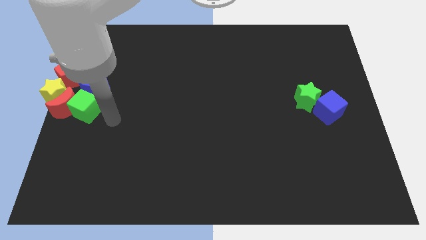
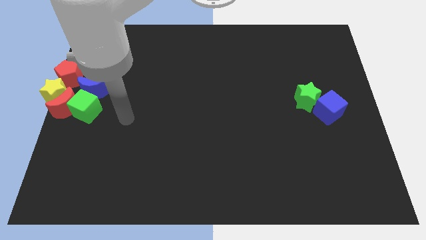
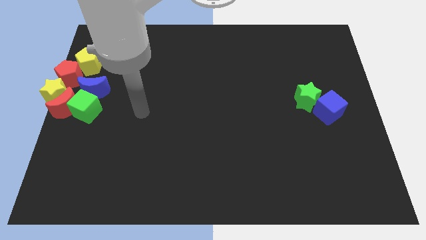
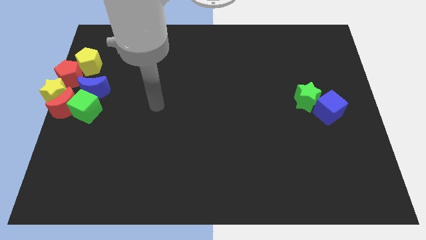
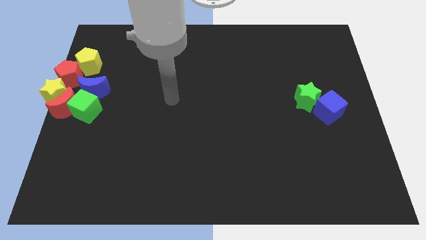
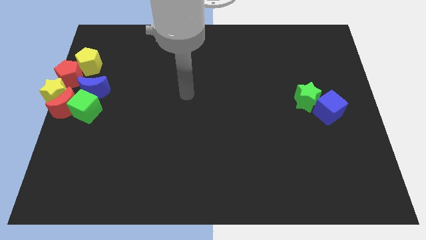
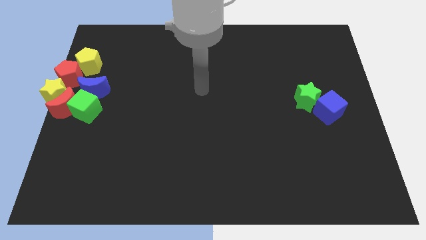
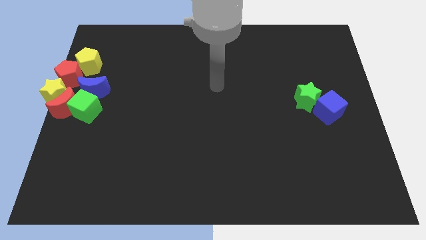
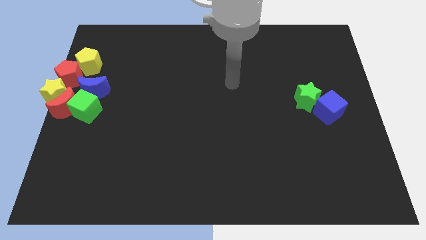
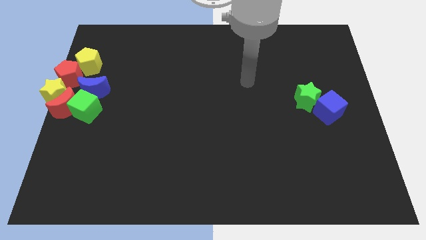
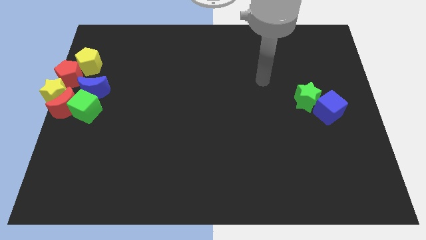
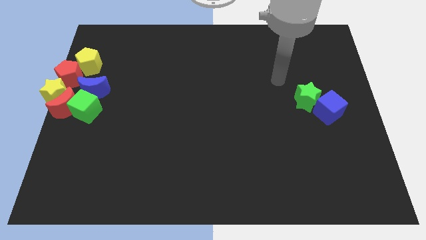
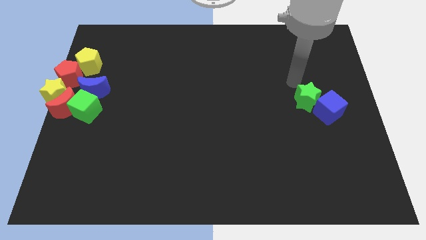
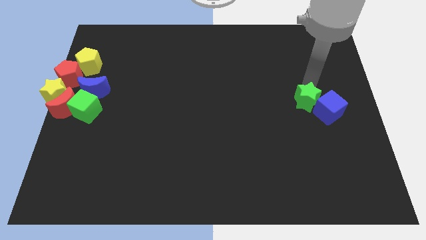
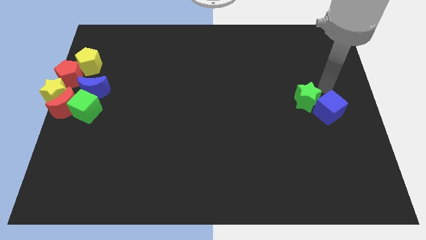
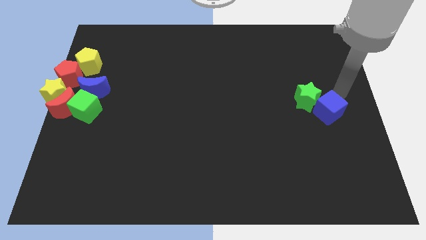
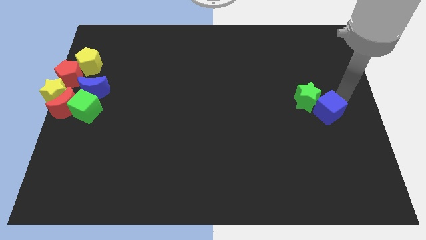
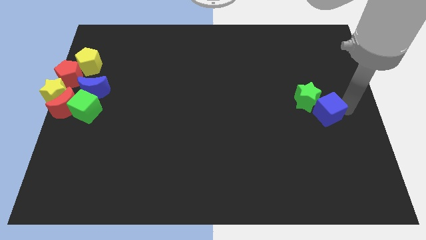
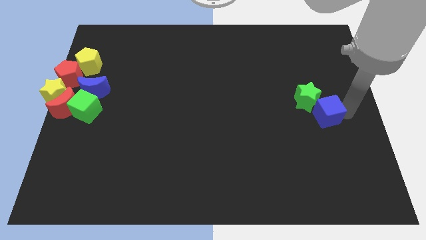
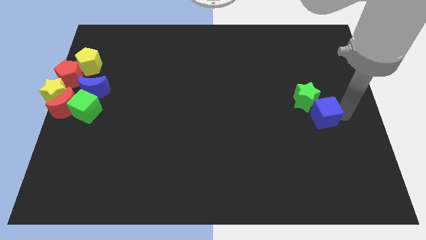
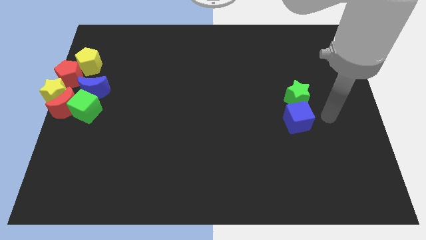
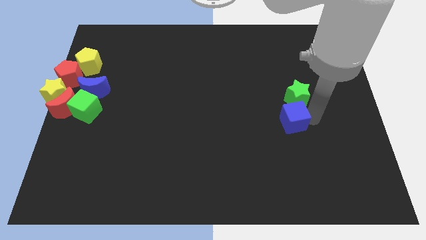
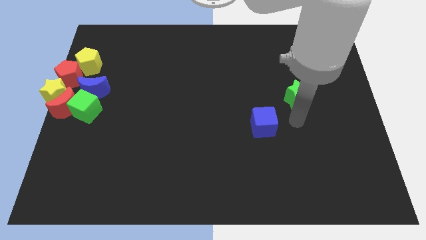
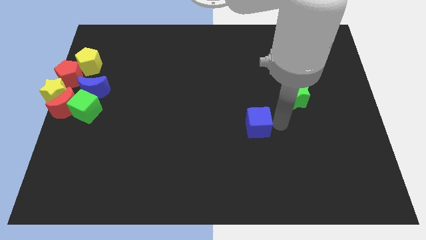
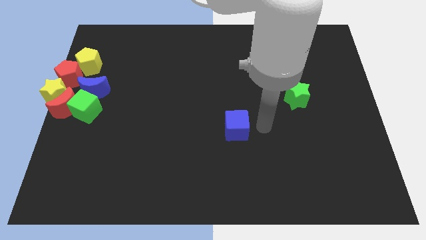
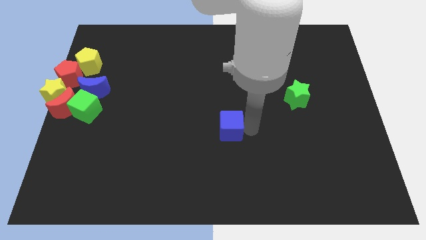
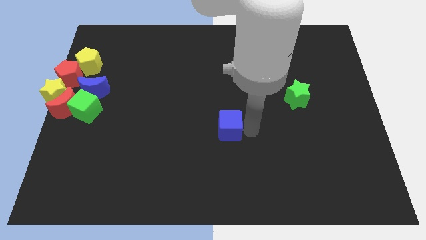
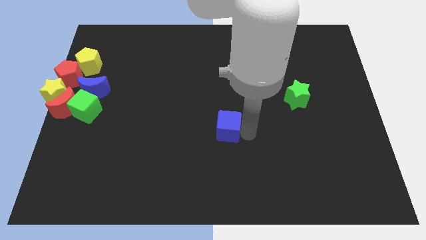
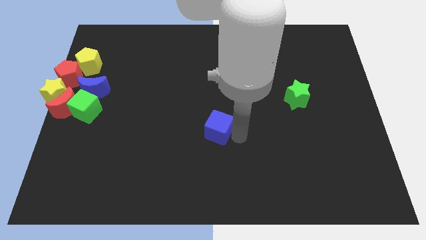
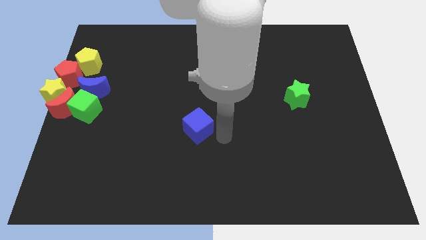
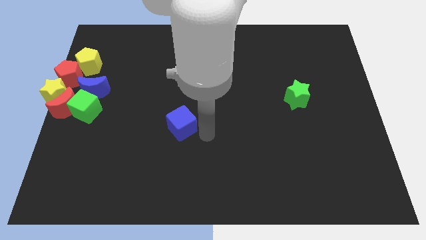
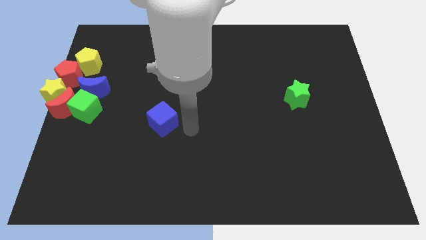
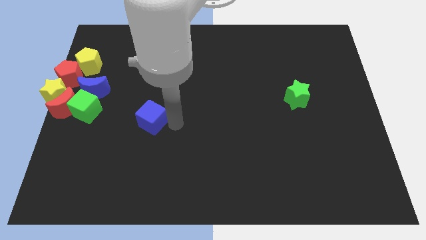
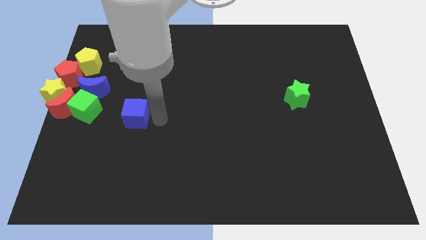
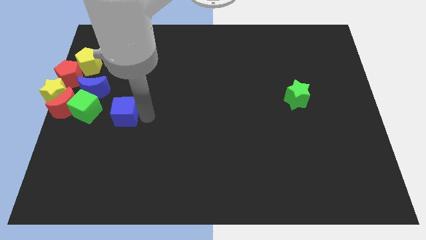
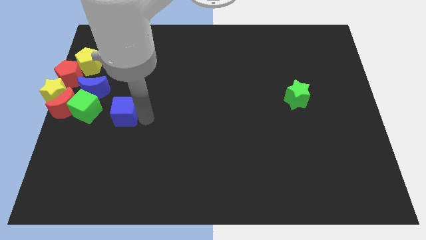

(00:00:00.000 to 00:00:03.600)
move the blue cube towards the green cube

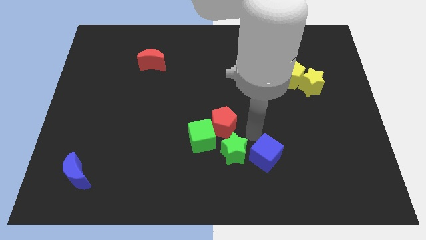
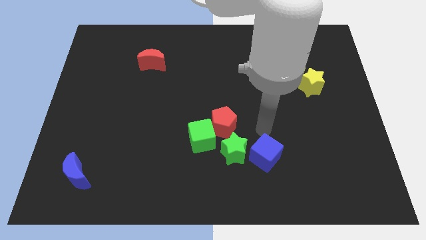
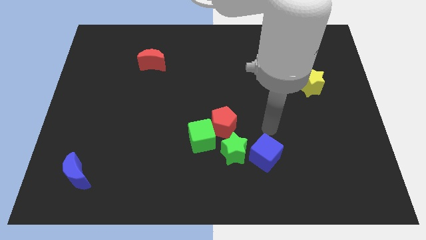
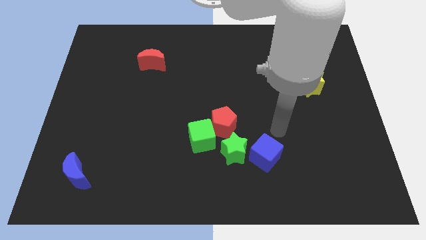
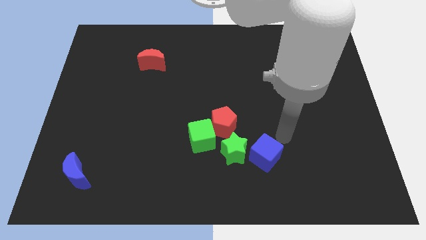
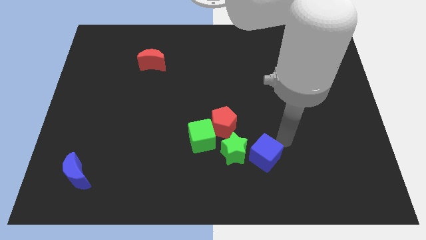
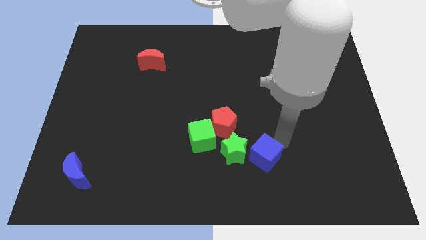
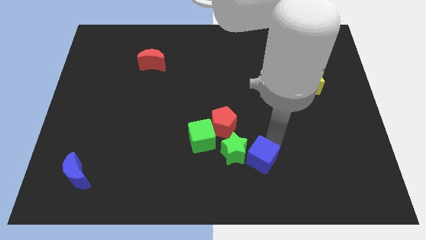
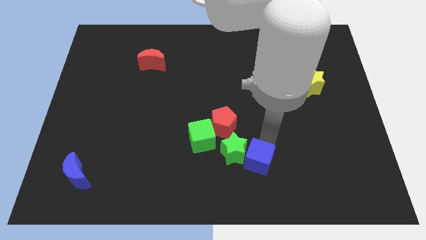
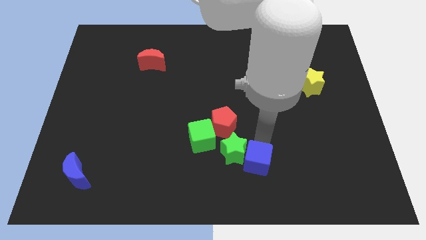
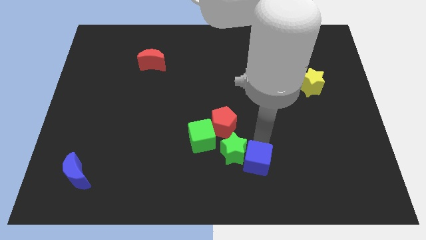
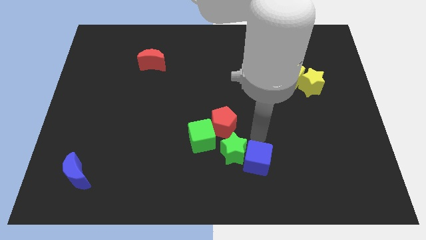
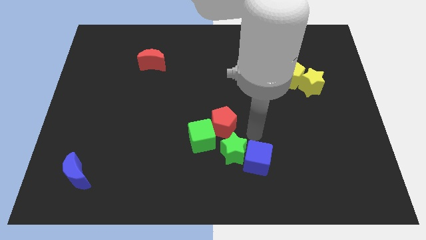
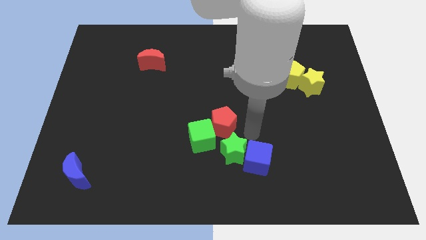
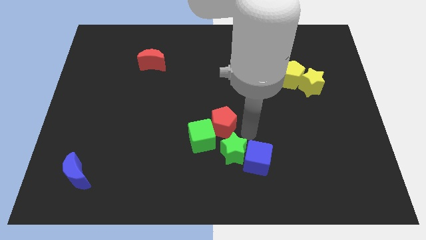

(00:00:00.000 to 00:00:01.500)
adjust the blue cube beside the green star

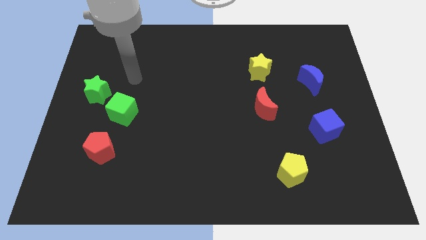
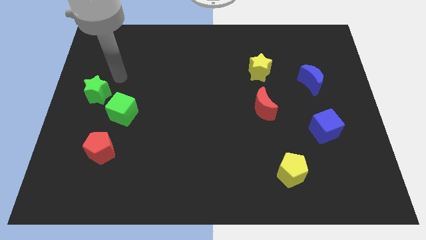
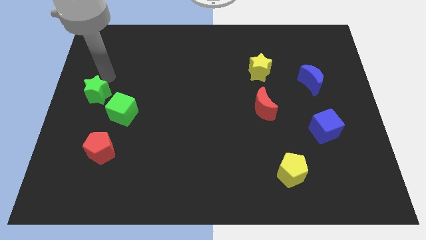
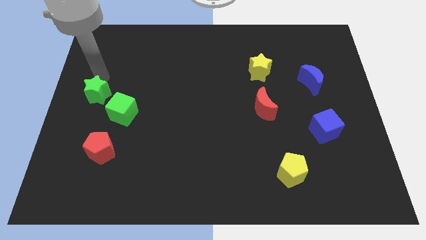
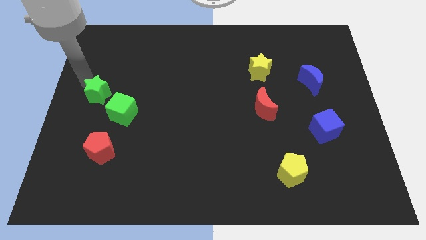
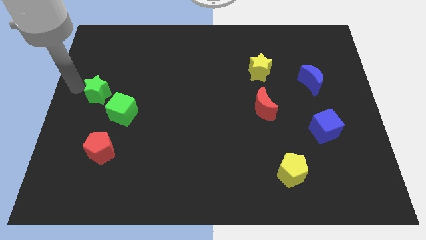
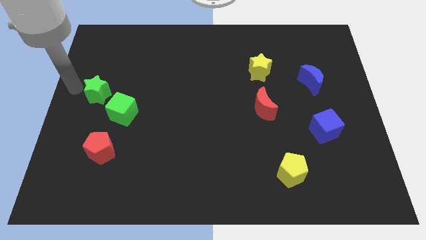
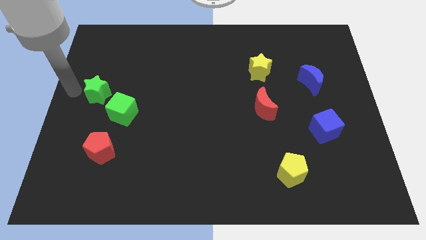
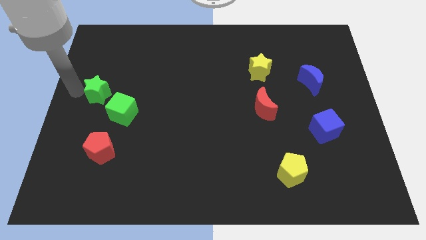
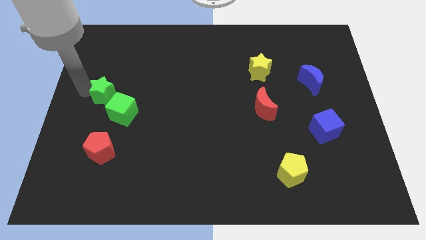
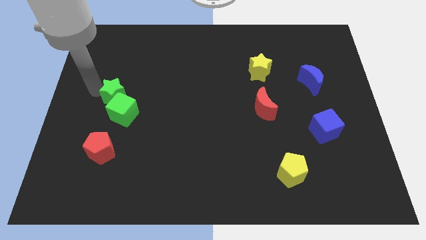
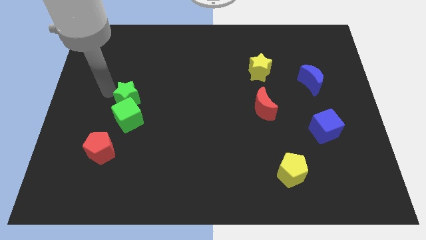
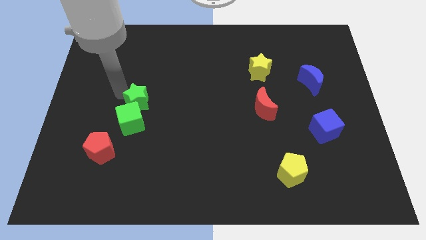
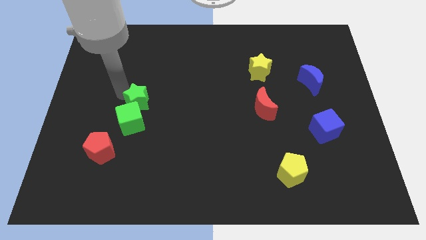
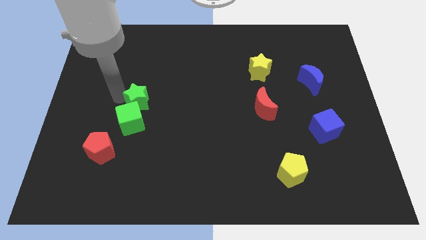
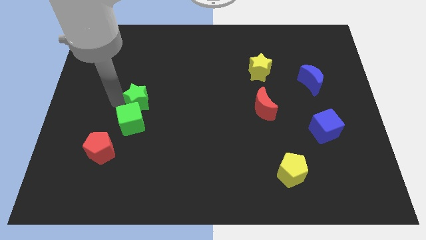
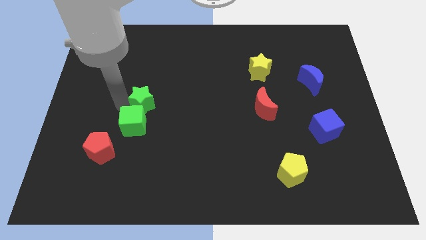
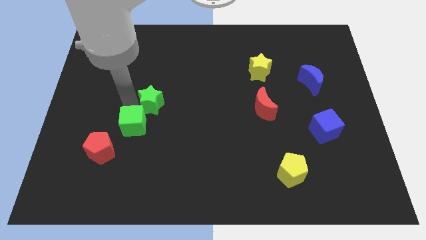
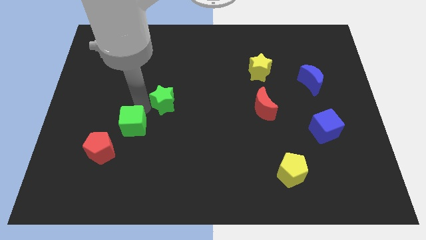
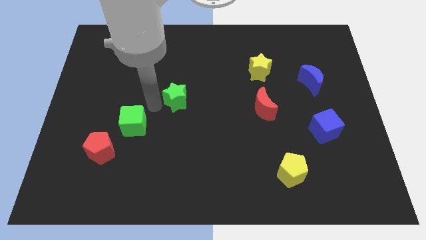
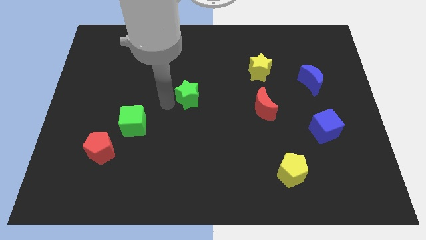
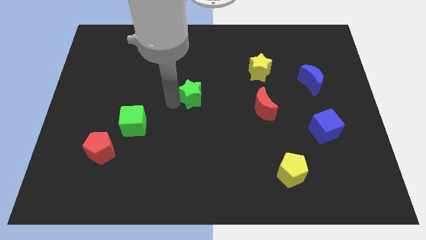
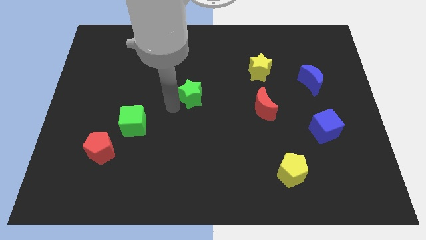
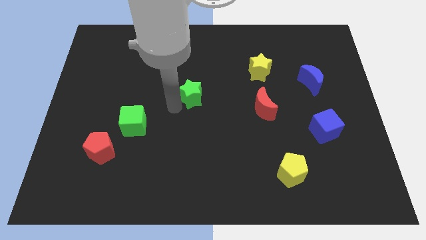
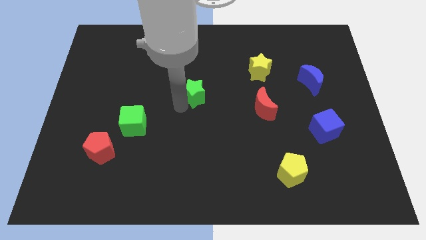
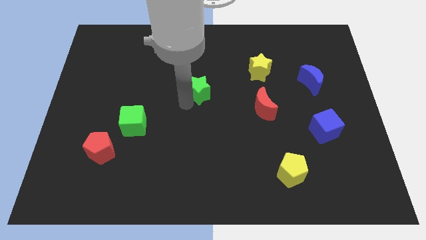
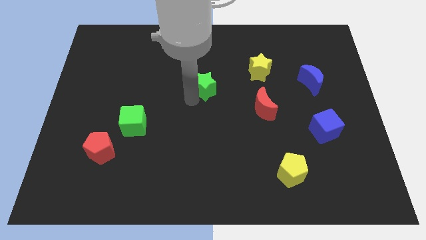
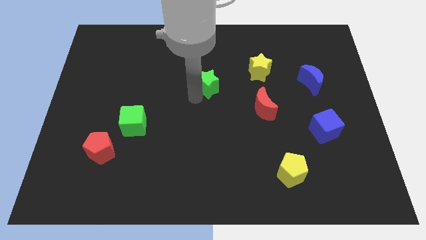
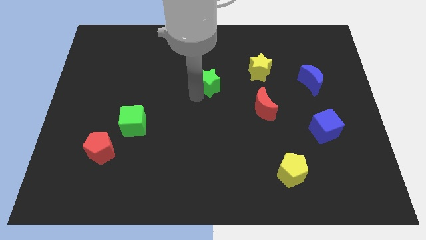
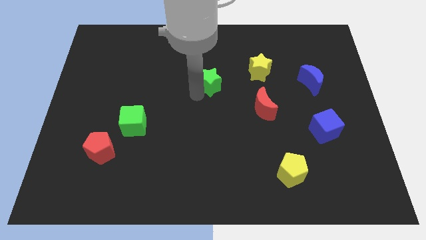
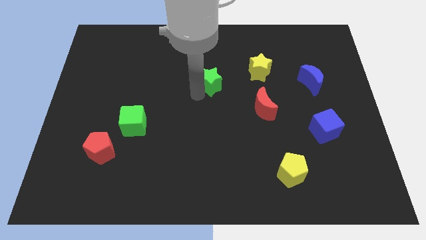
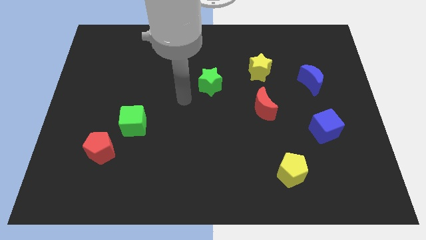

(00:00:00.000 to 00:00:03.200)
separate the green star from the green cube

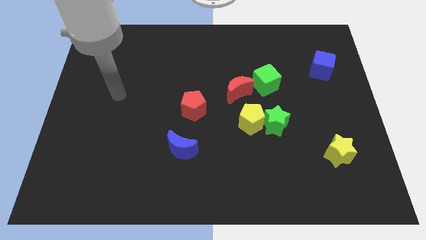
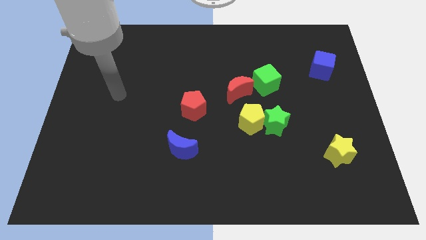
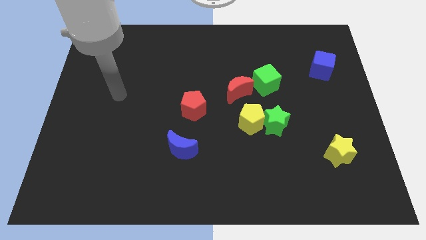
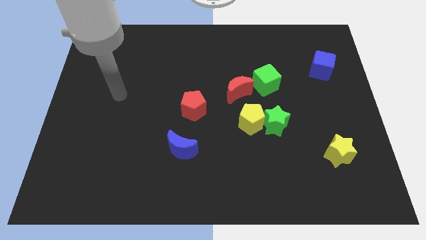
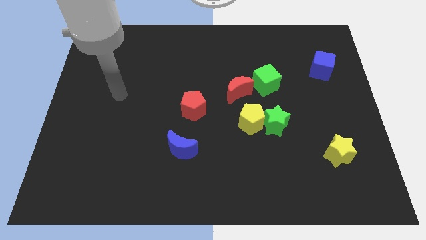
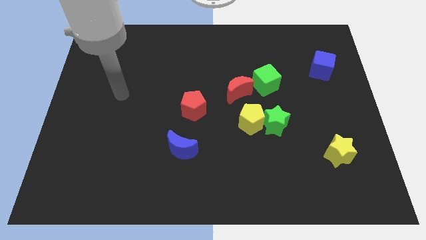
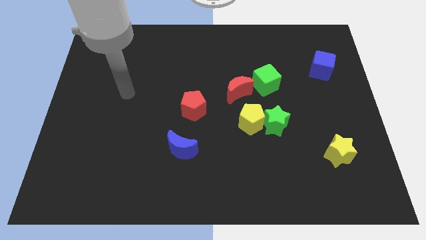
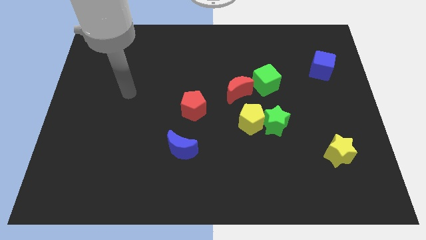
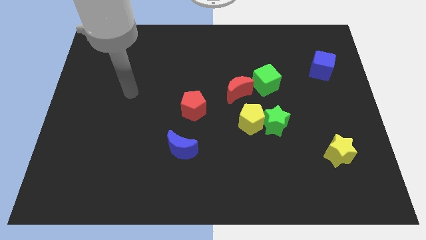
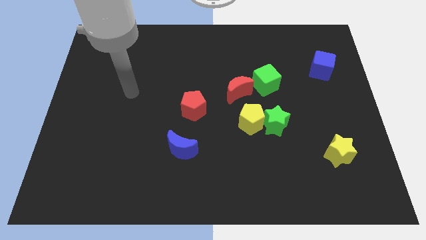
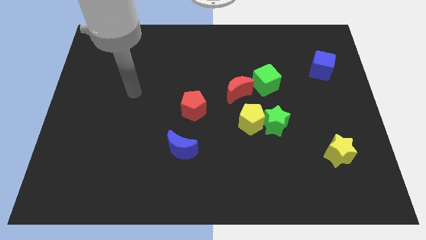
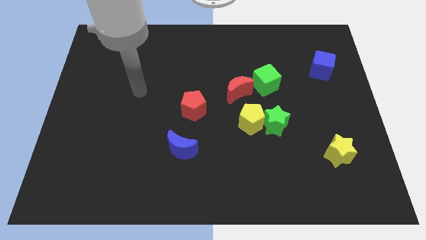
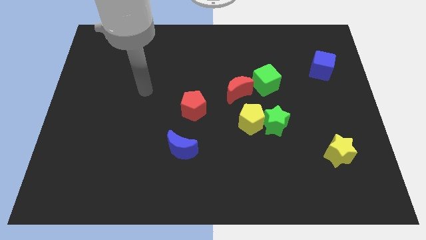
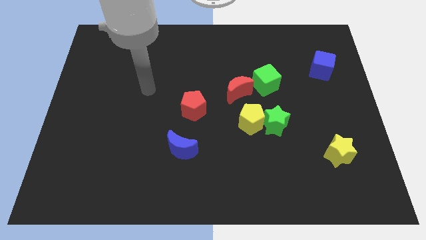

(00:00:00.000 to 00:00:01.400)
move your arm towards center
